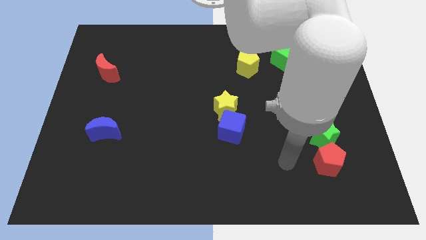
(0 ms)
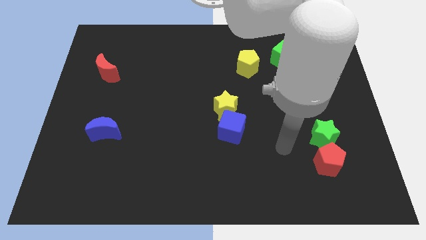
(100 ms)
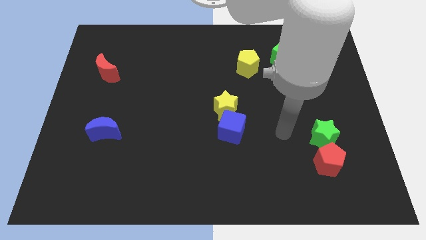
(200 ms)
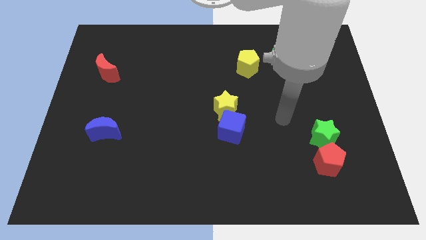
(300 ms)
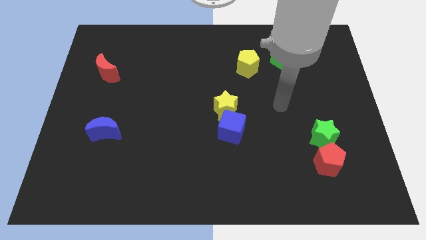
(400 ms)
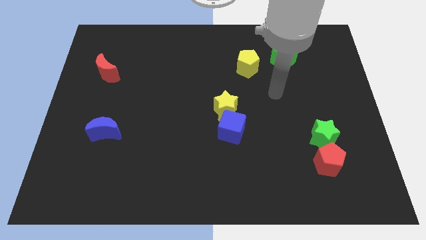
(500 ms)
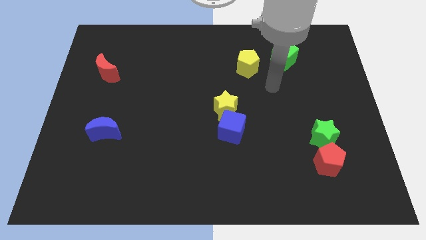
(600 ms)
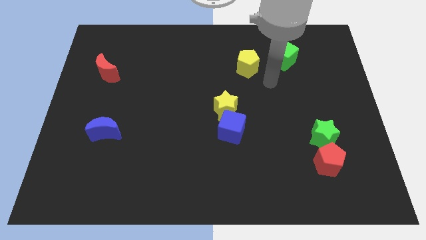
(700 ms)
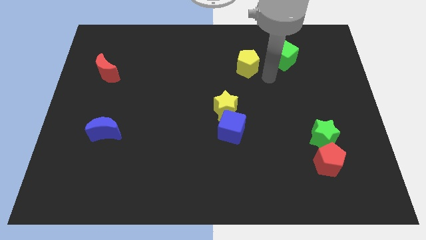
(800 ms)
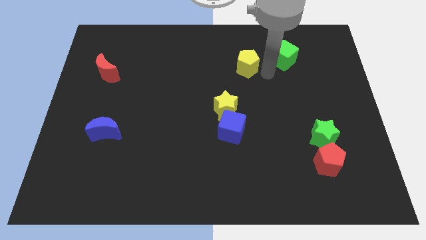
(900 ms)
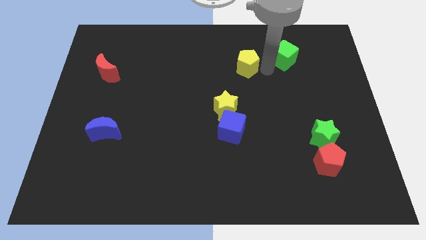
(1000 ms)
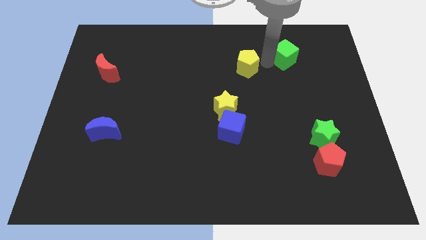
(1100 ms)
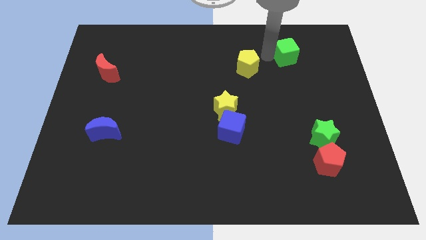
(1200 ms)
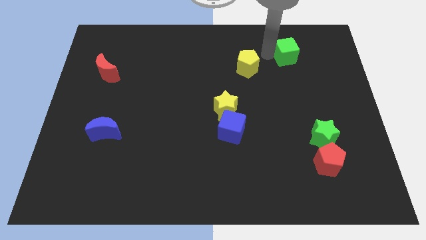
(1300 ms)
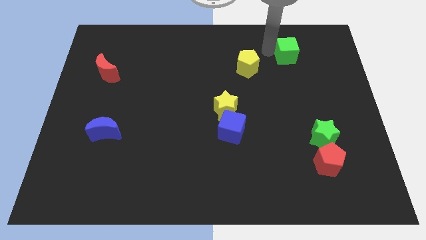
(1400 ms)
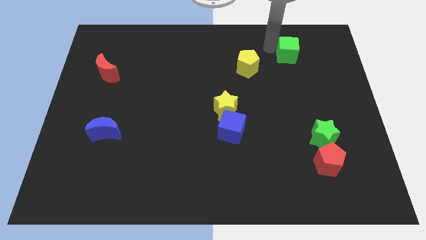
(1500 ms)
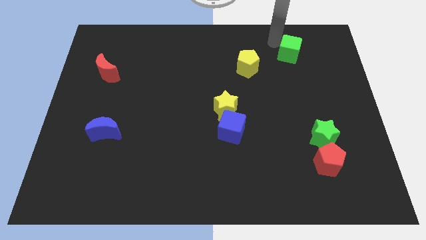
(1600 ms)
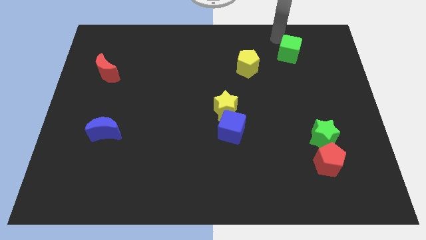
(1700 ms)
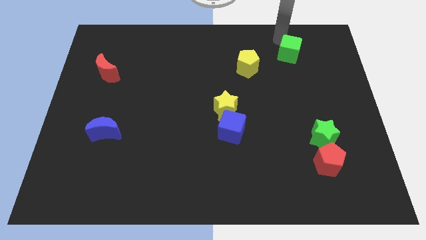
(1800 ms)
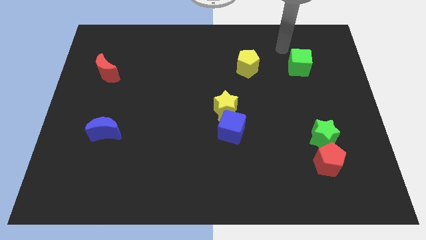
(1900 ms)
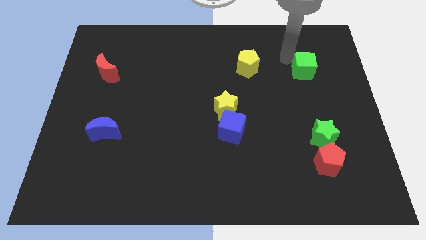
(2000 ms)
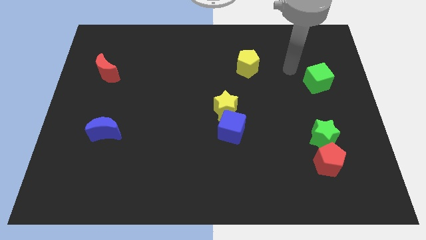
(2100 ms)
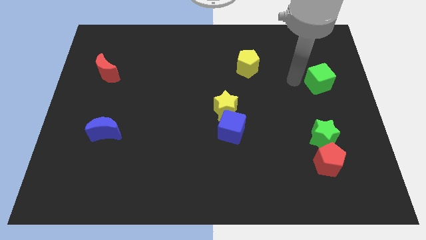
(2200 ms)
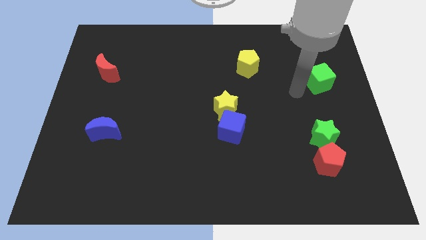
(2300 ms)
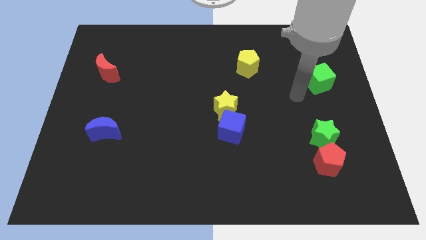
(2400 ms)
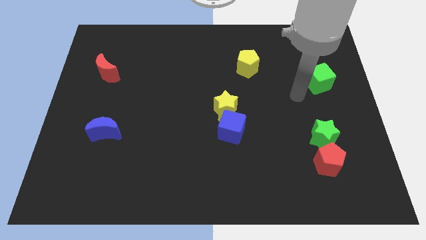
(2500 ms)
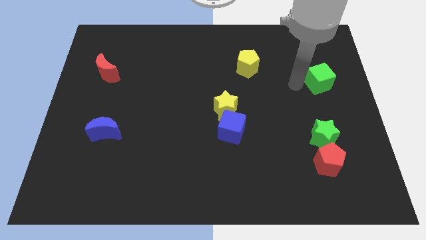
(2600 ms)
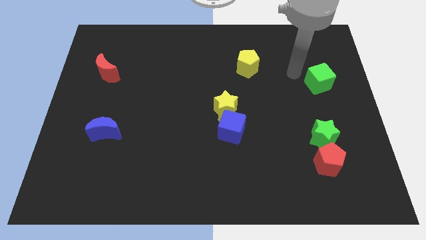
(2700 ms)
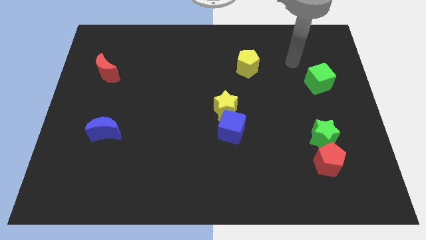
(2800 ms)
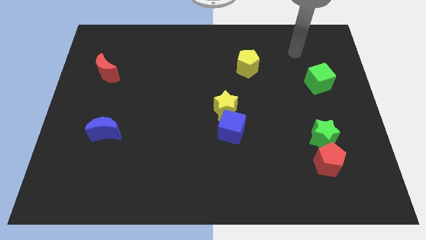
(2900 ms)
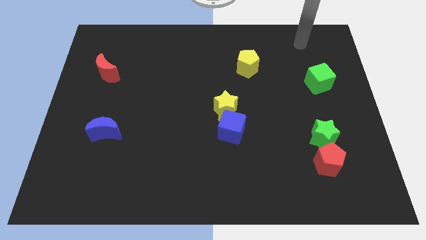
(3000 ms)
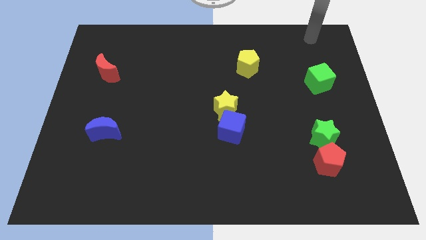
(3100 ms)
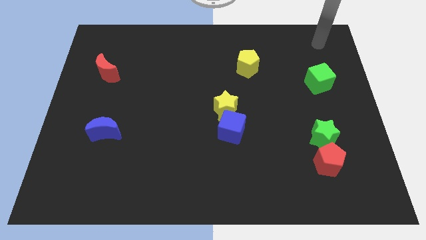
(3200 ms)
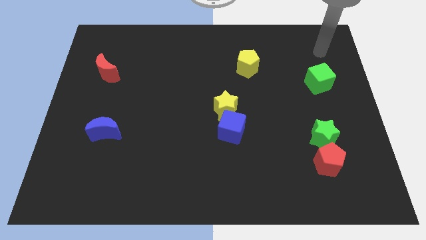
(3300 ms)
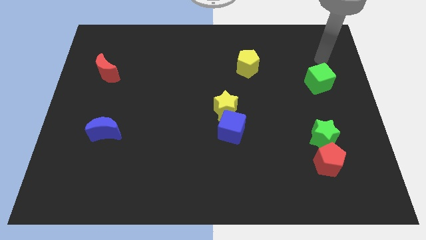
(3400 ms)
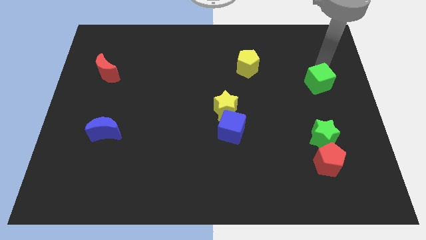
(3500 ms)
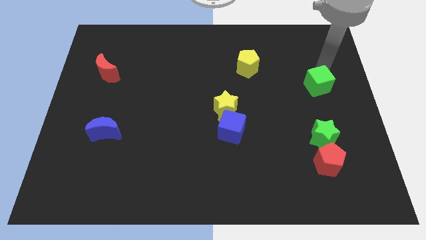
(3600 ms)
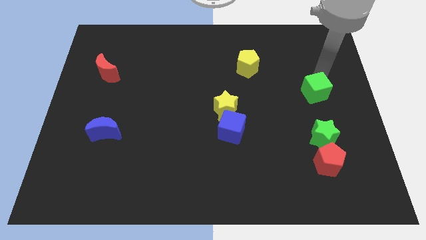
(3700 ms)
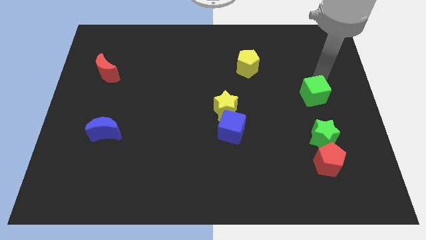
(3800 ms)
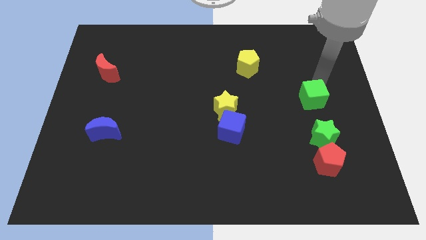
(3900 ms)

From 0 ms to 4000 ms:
place the green cube above the green star

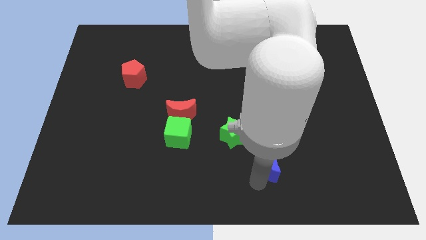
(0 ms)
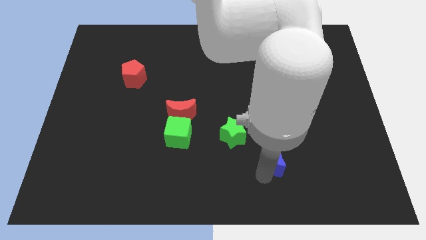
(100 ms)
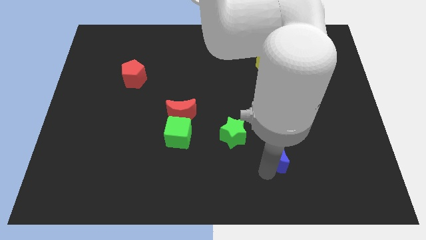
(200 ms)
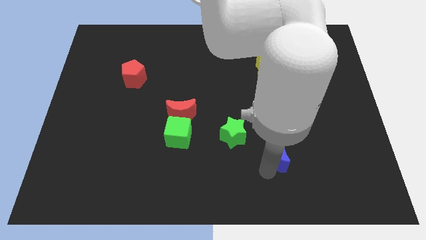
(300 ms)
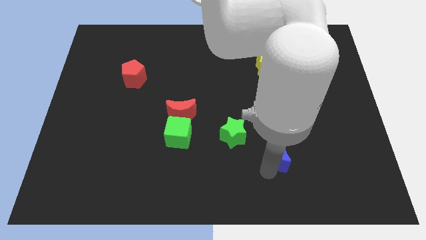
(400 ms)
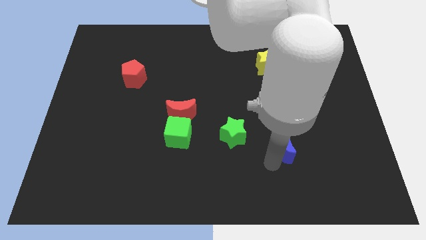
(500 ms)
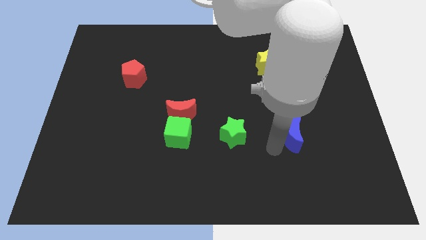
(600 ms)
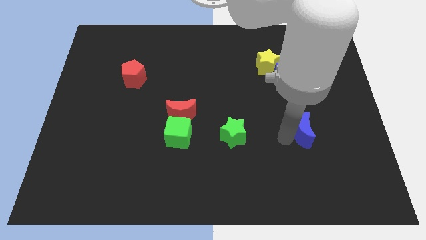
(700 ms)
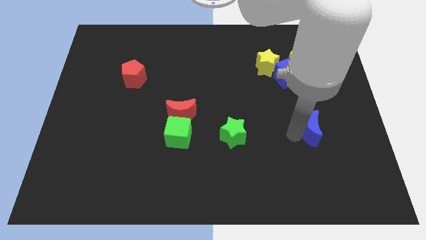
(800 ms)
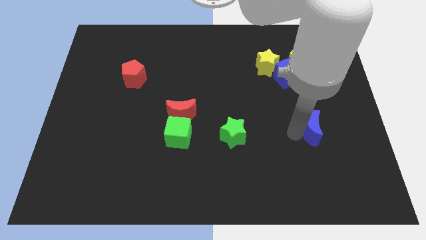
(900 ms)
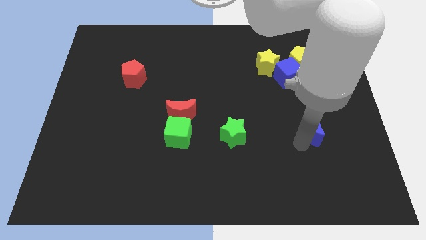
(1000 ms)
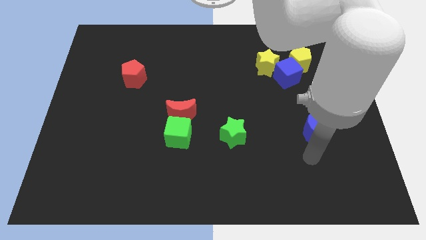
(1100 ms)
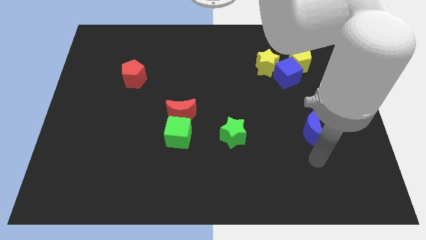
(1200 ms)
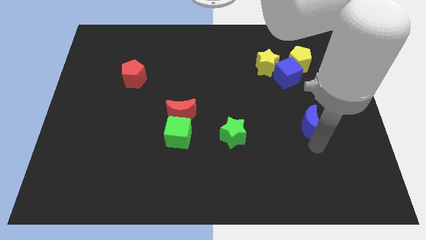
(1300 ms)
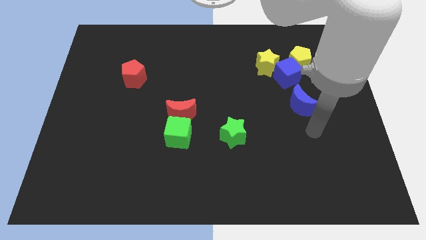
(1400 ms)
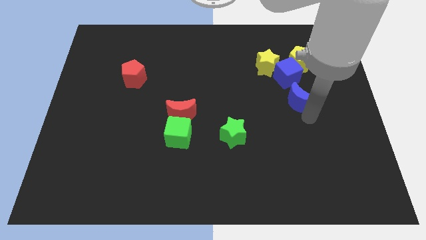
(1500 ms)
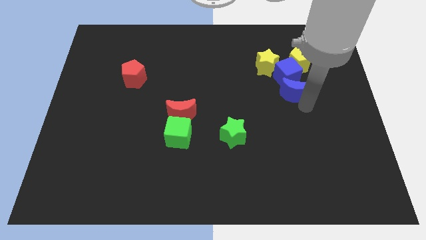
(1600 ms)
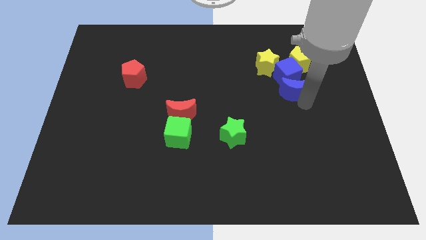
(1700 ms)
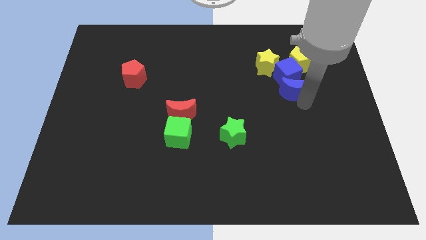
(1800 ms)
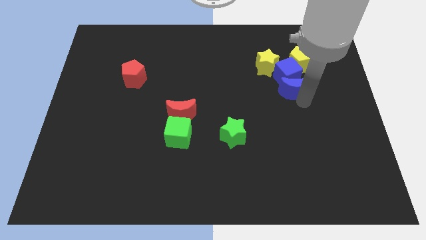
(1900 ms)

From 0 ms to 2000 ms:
move the blue crescent into the below of the blue cube

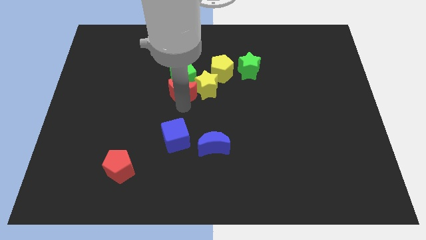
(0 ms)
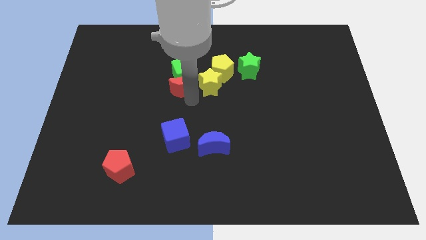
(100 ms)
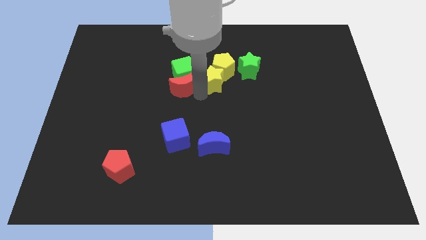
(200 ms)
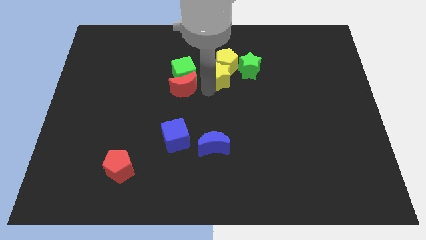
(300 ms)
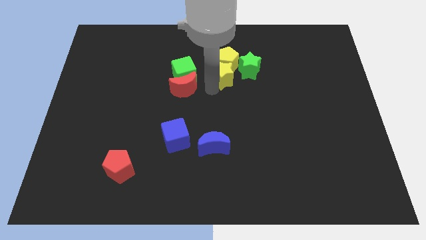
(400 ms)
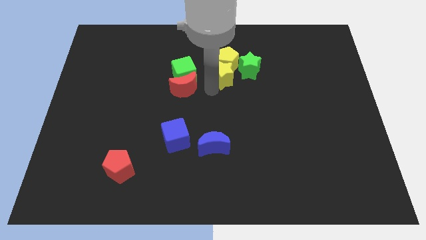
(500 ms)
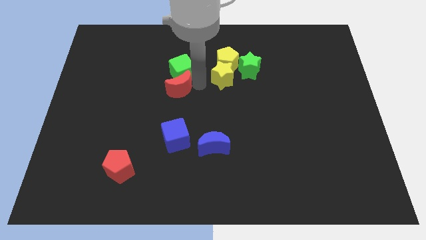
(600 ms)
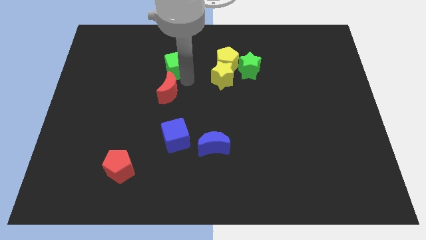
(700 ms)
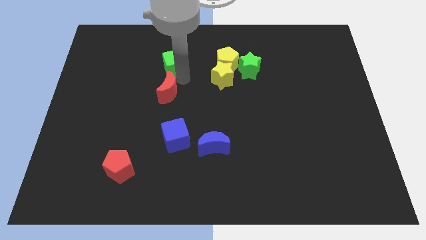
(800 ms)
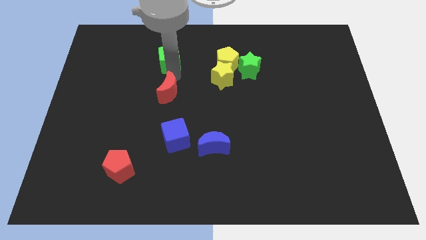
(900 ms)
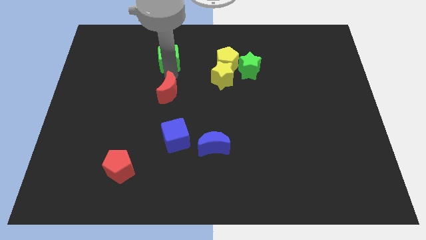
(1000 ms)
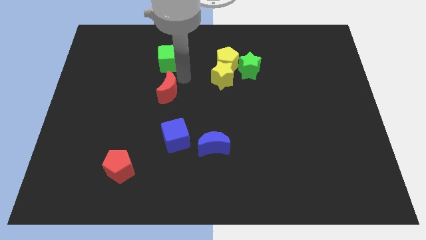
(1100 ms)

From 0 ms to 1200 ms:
move your arm in between green cube and red crescent

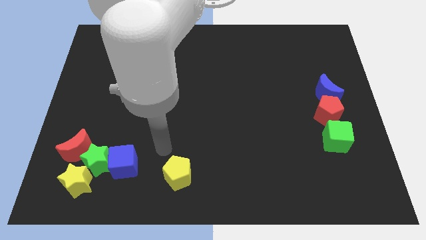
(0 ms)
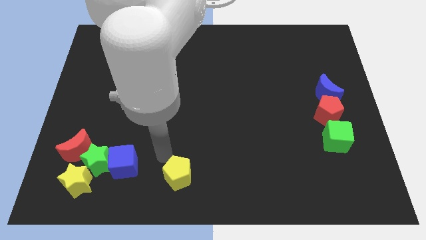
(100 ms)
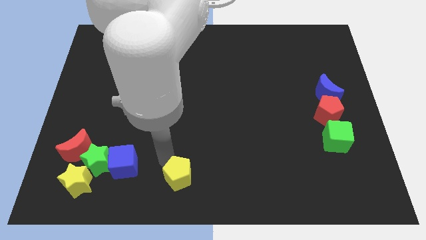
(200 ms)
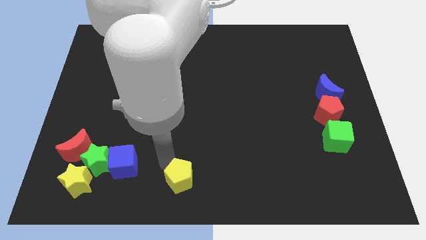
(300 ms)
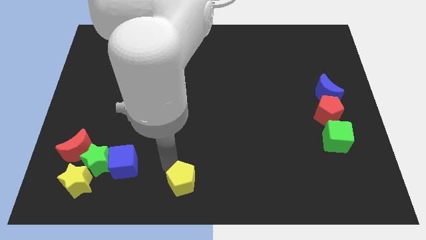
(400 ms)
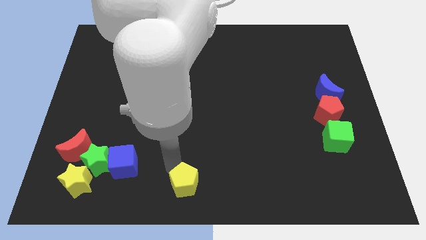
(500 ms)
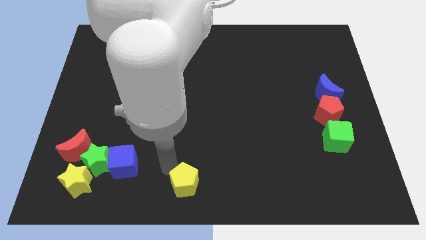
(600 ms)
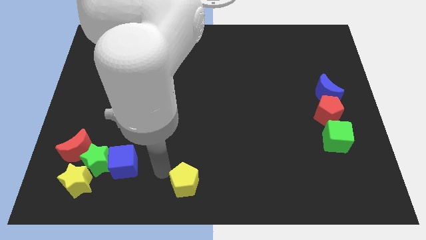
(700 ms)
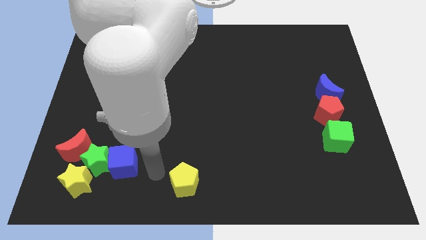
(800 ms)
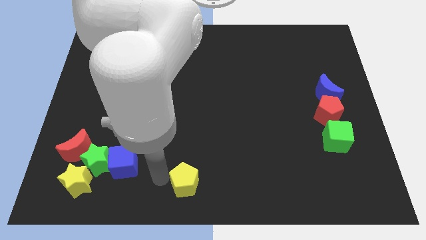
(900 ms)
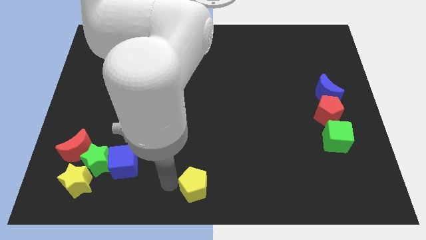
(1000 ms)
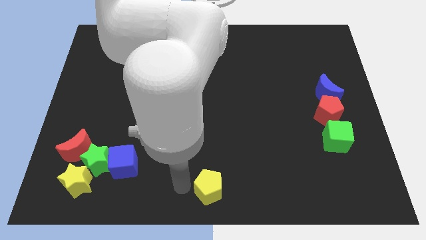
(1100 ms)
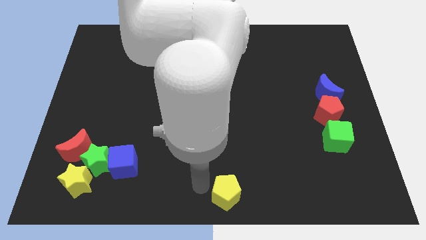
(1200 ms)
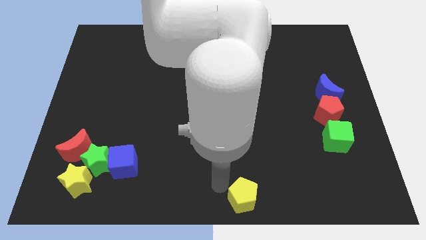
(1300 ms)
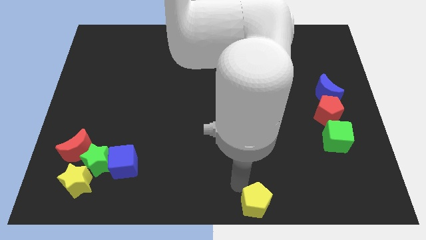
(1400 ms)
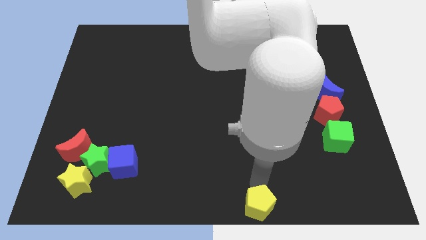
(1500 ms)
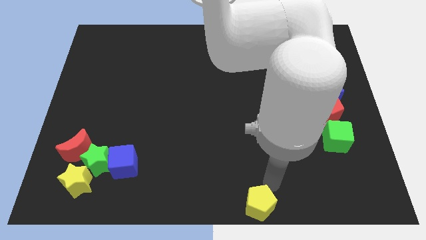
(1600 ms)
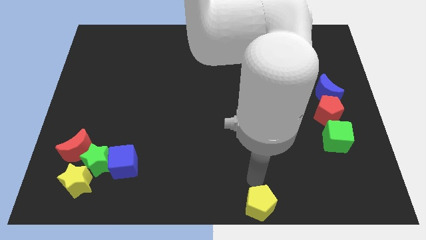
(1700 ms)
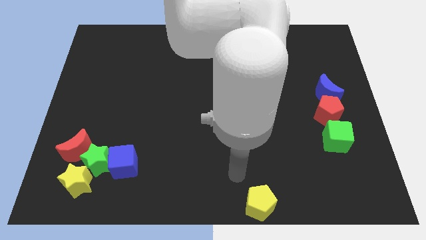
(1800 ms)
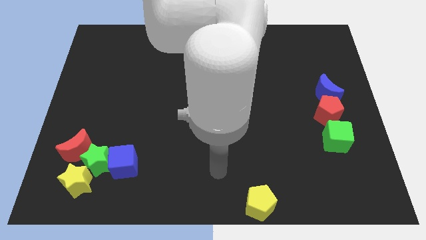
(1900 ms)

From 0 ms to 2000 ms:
slide the yellow pentagon to the bottom of the board
